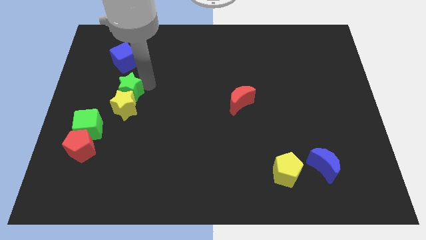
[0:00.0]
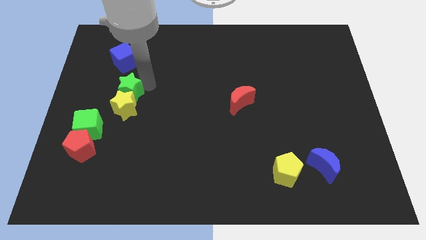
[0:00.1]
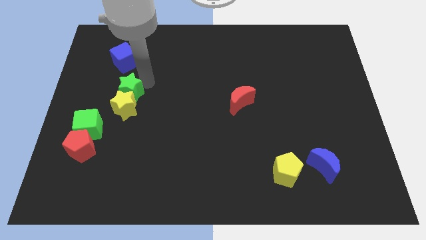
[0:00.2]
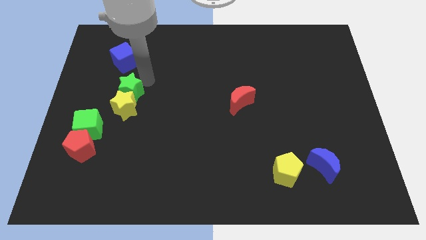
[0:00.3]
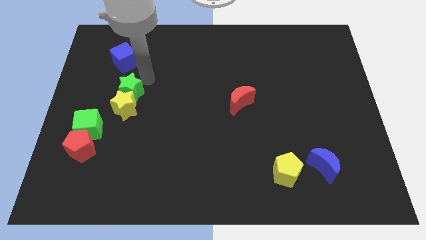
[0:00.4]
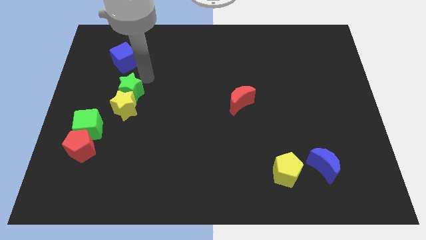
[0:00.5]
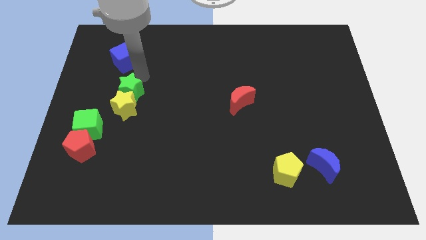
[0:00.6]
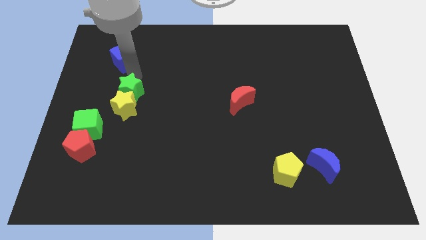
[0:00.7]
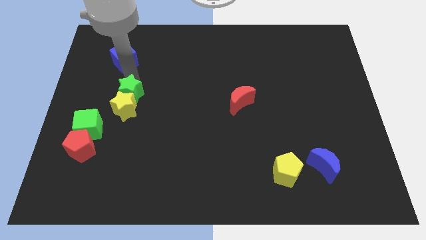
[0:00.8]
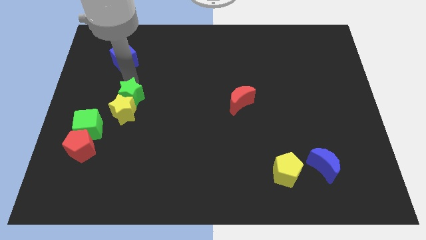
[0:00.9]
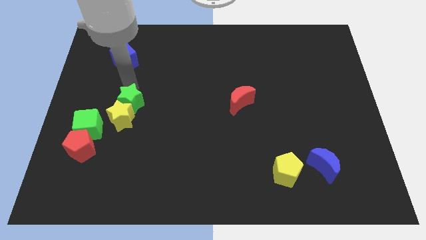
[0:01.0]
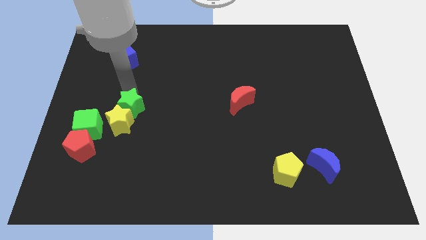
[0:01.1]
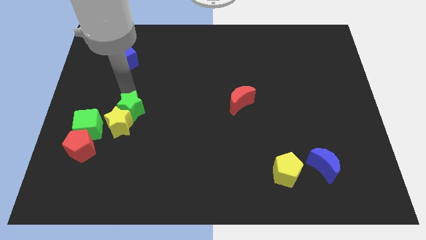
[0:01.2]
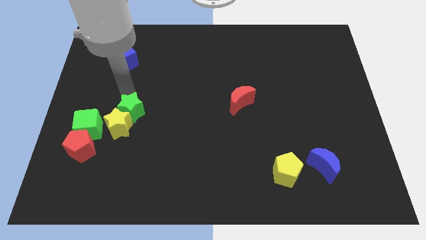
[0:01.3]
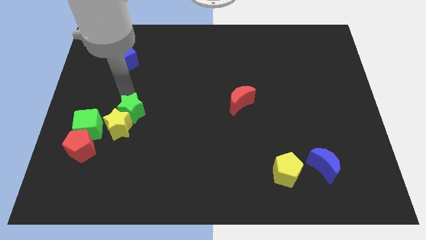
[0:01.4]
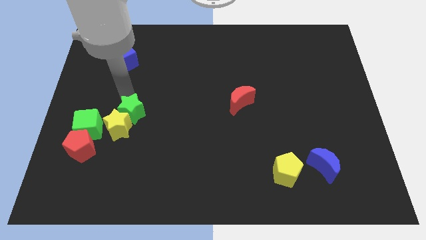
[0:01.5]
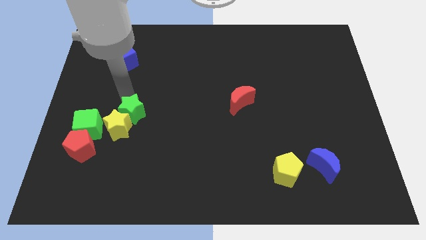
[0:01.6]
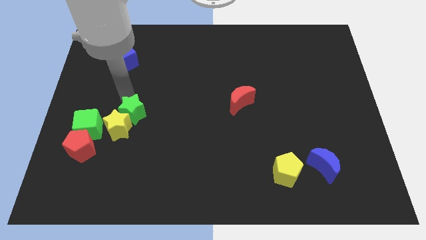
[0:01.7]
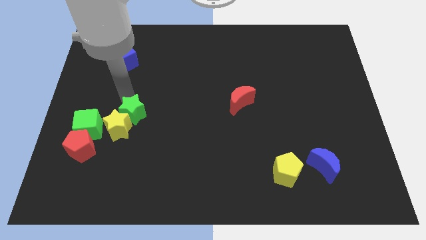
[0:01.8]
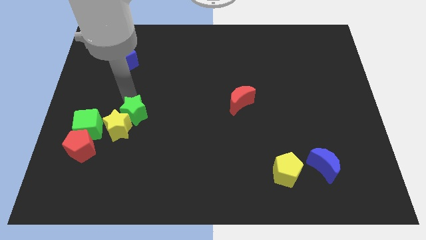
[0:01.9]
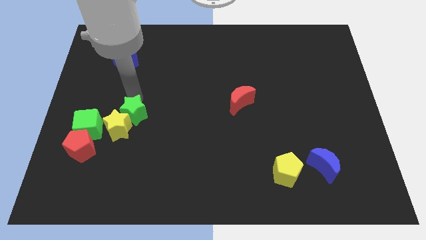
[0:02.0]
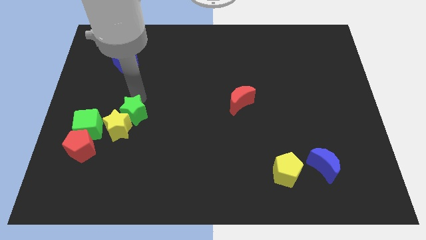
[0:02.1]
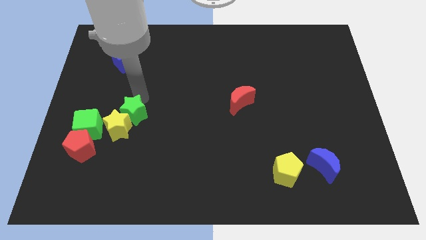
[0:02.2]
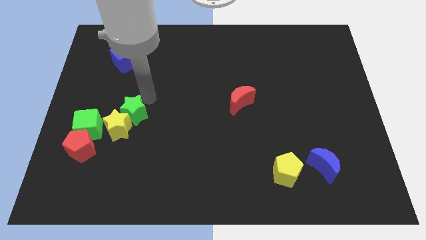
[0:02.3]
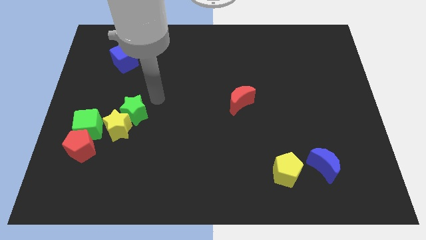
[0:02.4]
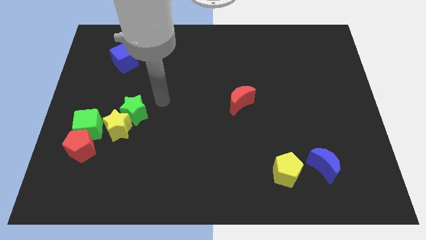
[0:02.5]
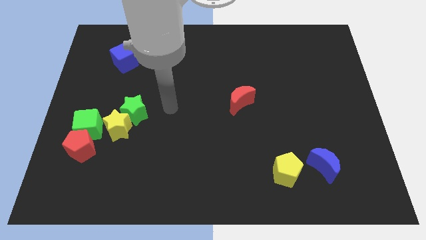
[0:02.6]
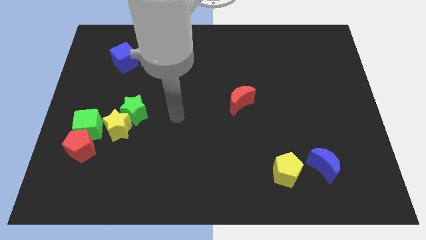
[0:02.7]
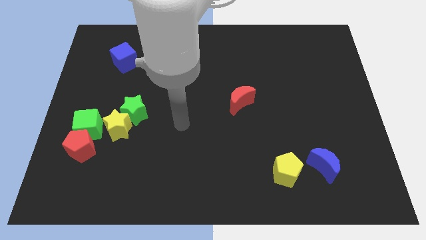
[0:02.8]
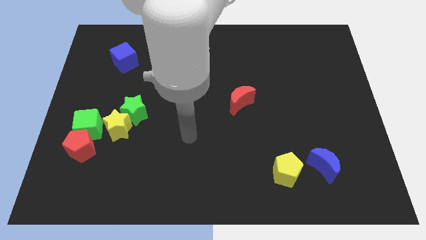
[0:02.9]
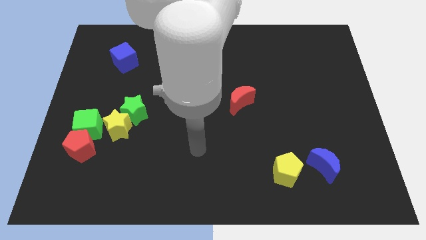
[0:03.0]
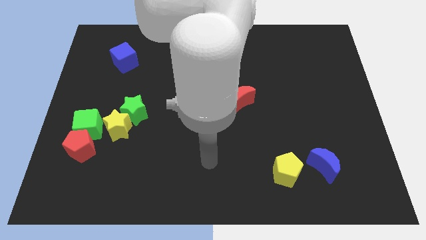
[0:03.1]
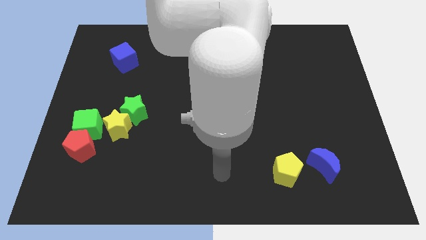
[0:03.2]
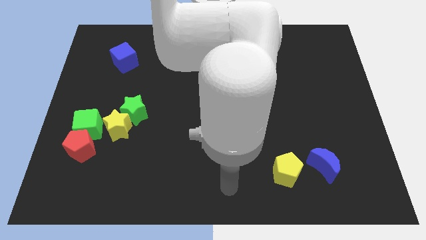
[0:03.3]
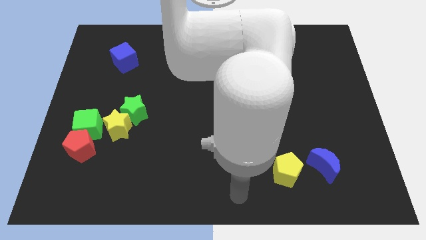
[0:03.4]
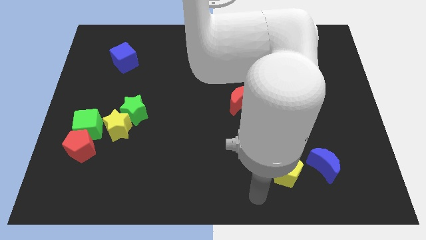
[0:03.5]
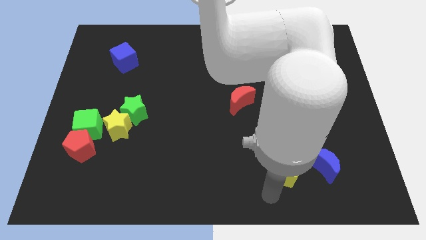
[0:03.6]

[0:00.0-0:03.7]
move the yellow star and green star to center left

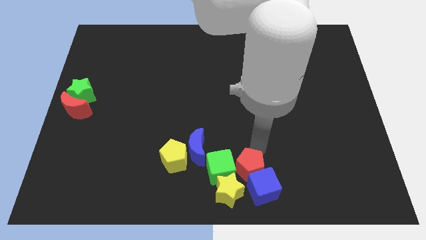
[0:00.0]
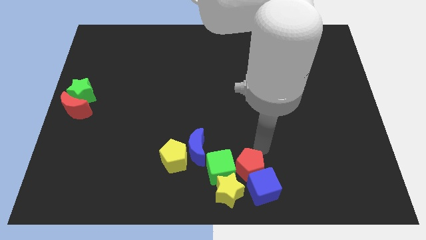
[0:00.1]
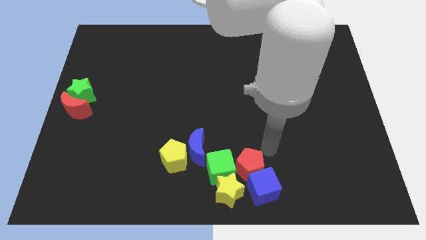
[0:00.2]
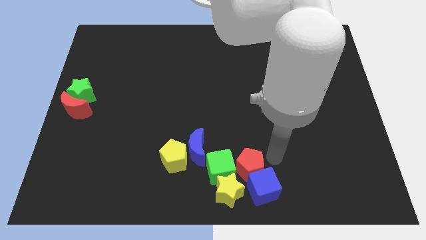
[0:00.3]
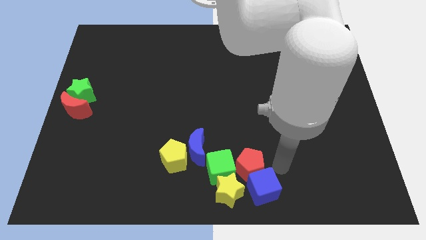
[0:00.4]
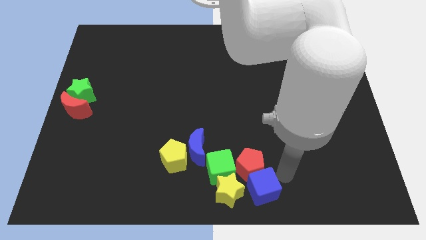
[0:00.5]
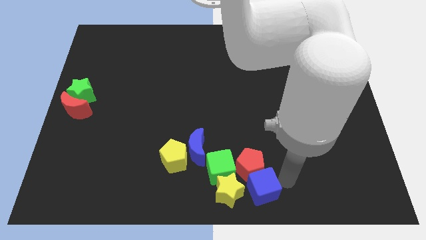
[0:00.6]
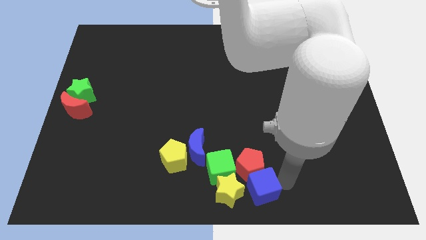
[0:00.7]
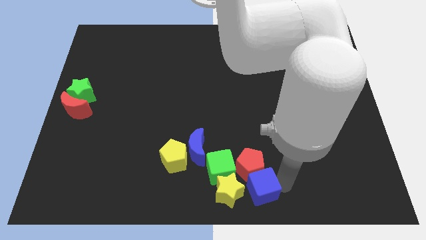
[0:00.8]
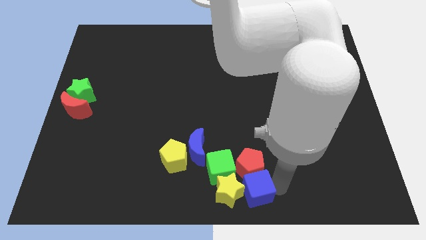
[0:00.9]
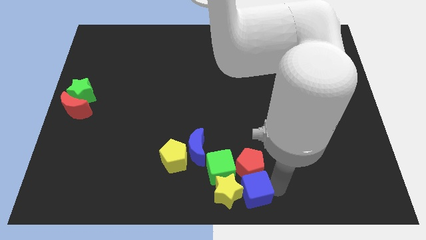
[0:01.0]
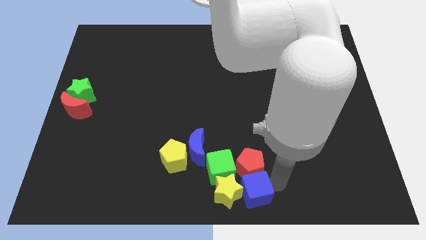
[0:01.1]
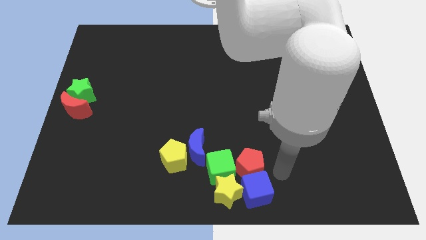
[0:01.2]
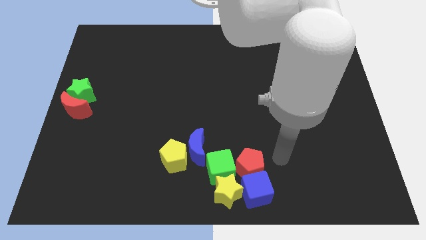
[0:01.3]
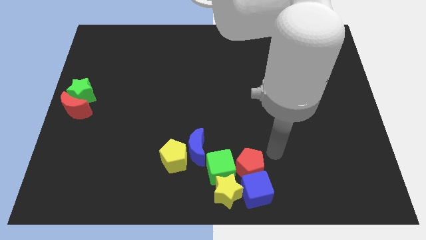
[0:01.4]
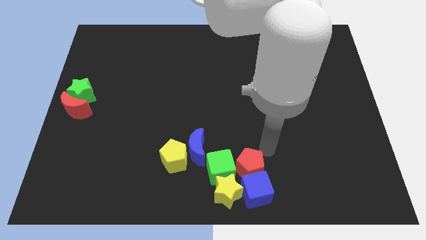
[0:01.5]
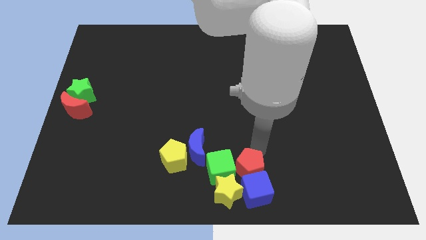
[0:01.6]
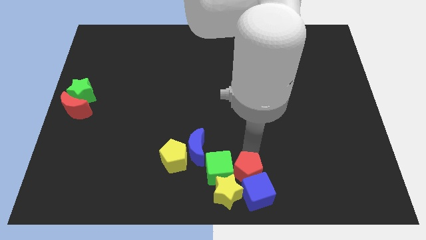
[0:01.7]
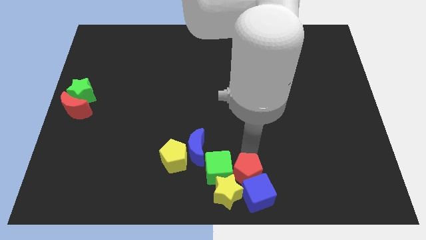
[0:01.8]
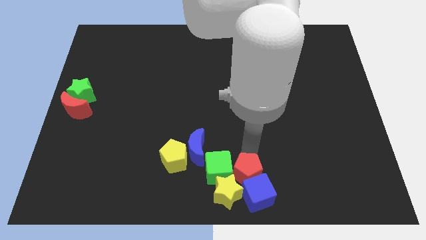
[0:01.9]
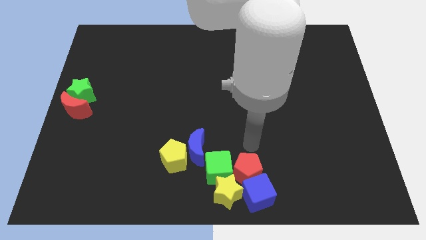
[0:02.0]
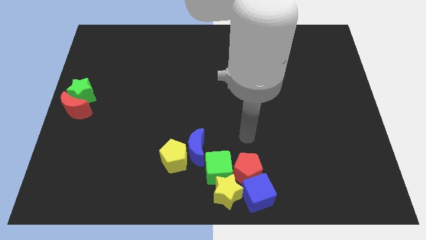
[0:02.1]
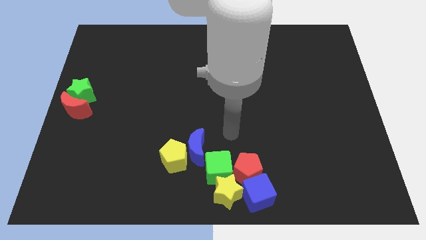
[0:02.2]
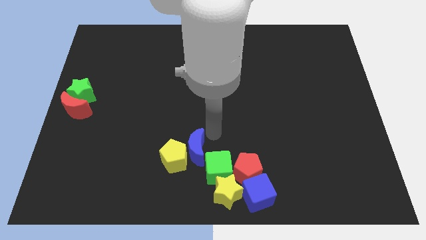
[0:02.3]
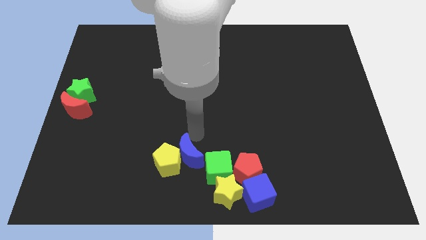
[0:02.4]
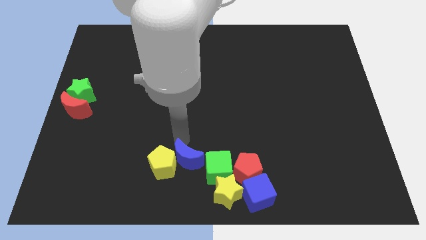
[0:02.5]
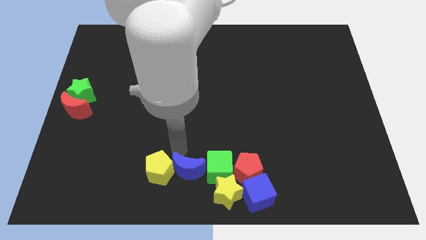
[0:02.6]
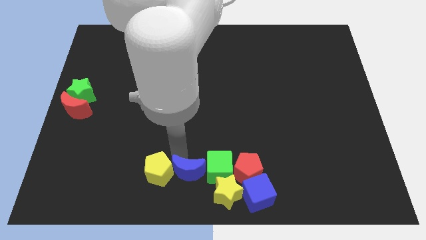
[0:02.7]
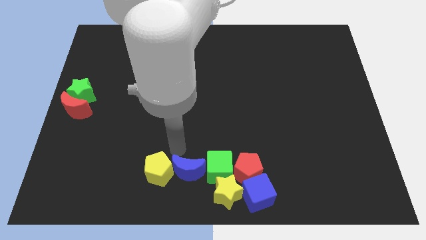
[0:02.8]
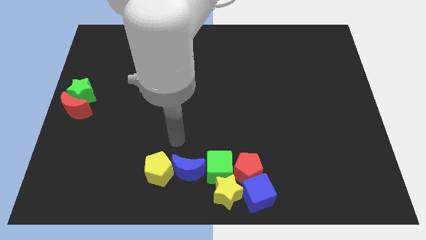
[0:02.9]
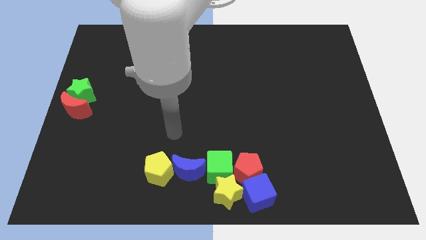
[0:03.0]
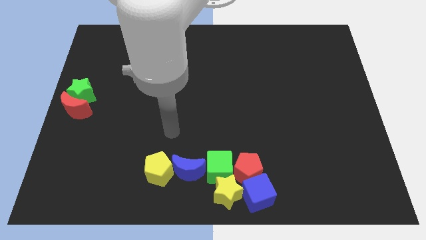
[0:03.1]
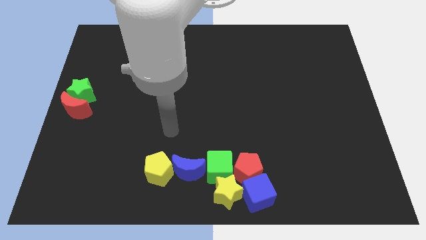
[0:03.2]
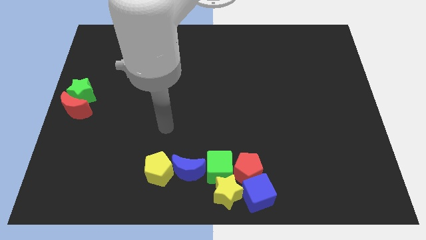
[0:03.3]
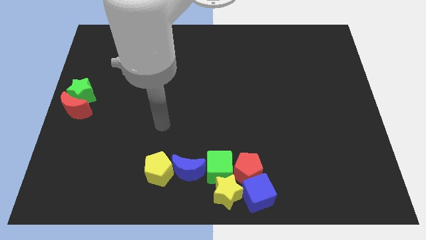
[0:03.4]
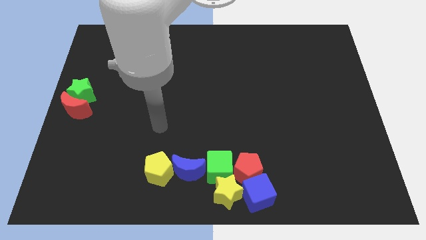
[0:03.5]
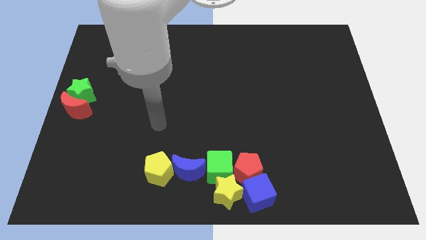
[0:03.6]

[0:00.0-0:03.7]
move the group of blocks towards the bottom center

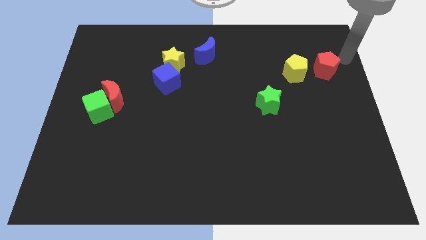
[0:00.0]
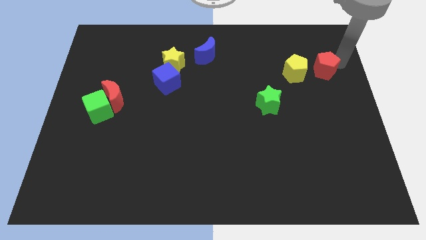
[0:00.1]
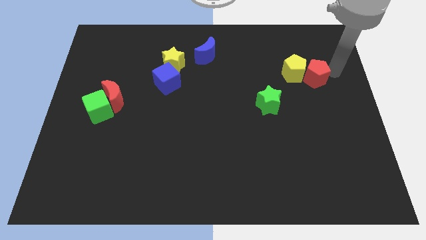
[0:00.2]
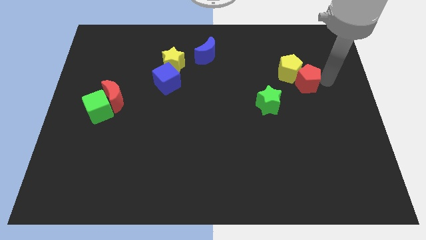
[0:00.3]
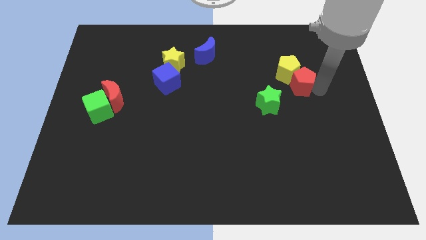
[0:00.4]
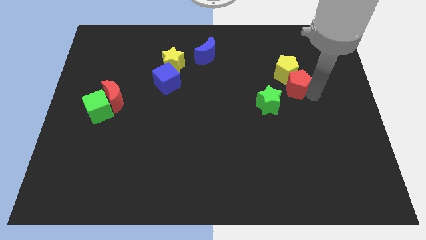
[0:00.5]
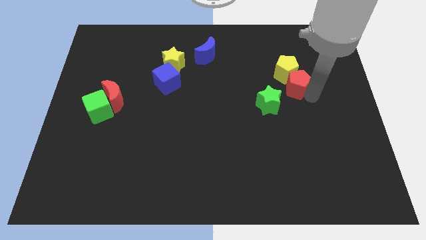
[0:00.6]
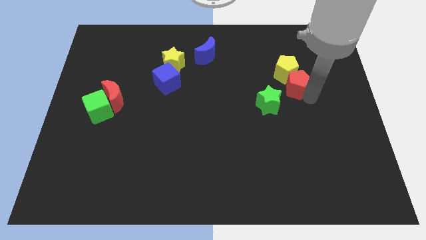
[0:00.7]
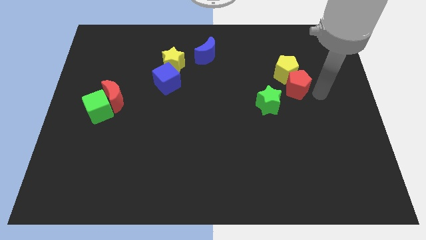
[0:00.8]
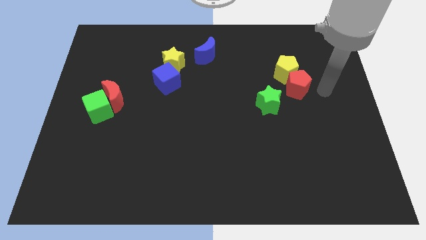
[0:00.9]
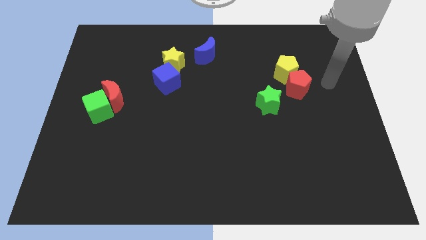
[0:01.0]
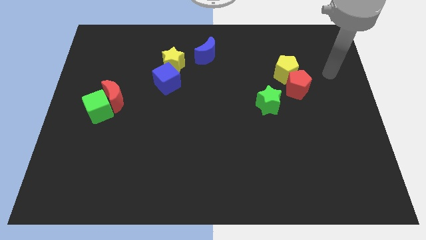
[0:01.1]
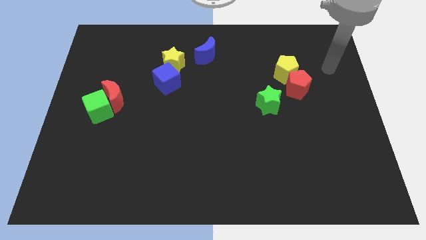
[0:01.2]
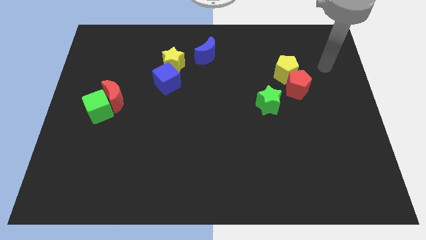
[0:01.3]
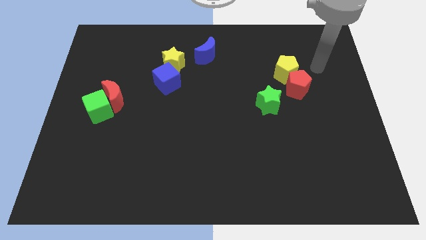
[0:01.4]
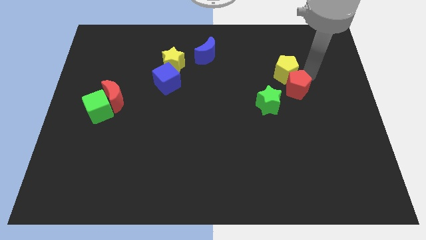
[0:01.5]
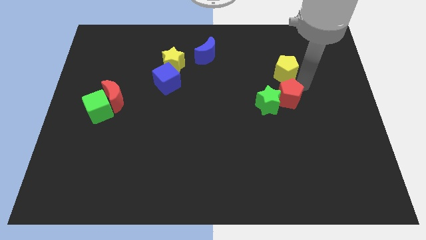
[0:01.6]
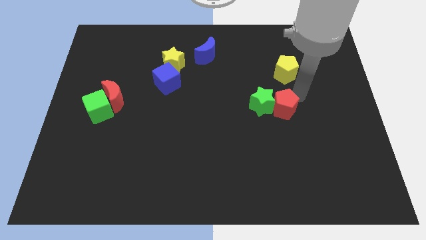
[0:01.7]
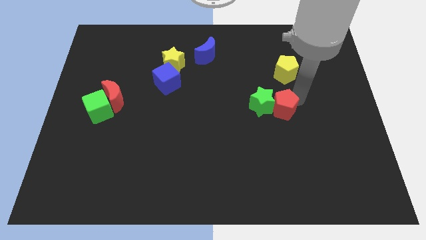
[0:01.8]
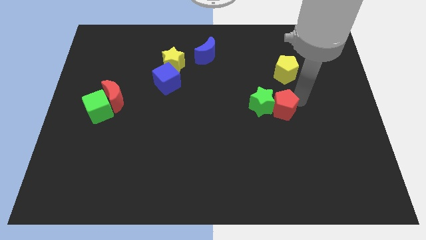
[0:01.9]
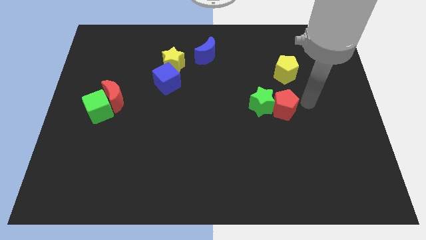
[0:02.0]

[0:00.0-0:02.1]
move red pentagon into the green star
